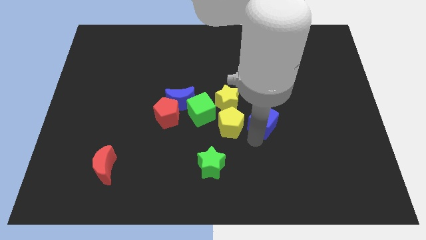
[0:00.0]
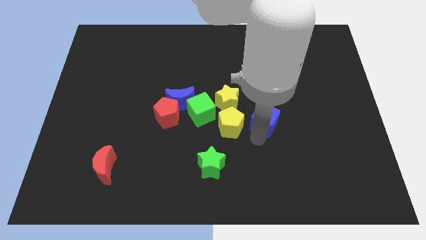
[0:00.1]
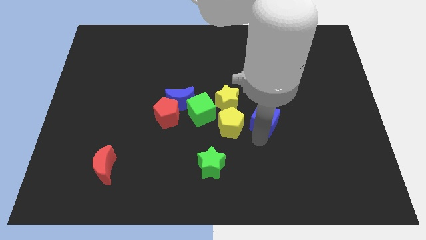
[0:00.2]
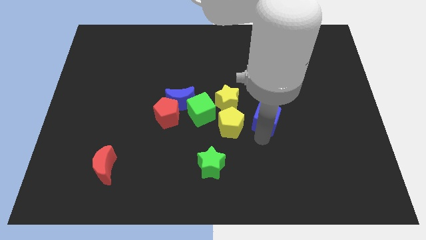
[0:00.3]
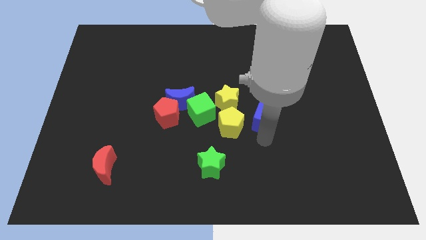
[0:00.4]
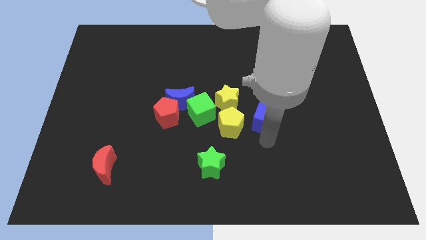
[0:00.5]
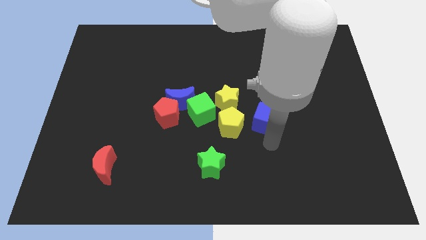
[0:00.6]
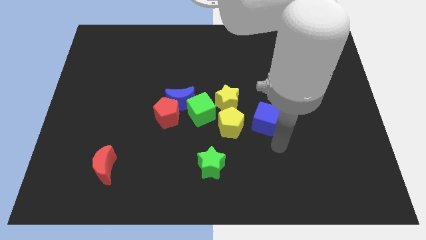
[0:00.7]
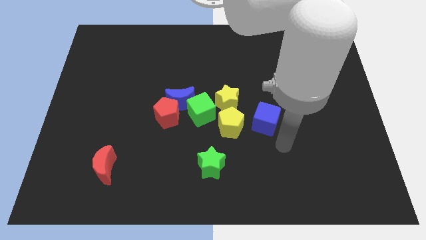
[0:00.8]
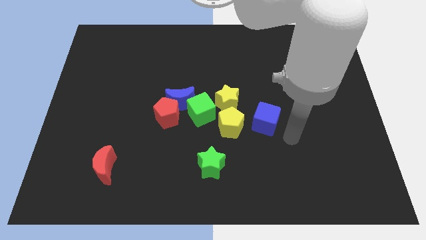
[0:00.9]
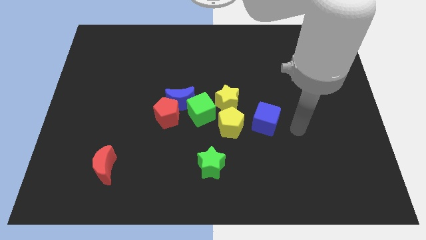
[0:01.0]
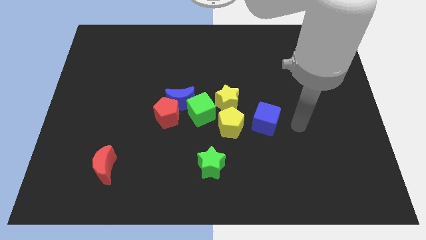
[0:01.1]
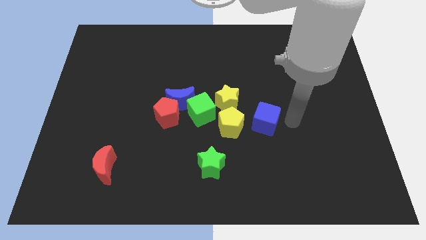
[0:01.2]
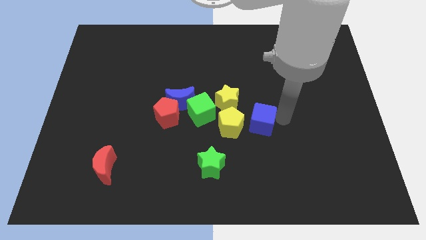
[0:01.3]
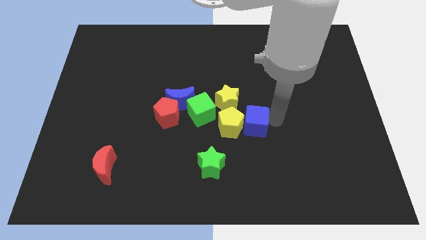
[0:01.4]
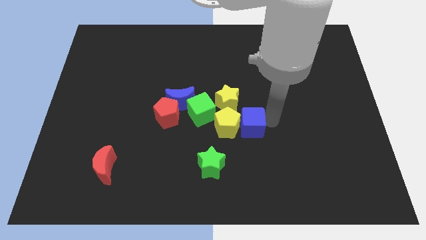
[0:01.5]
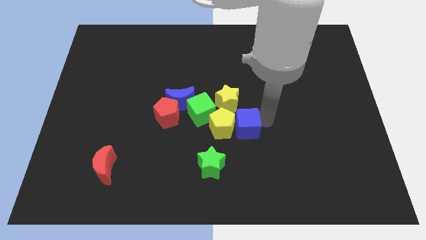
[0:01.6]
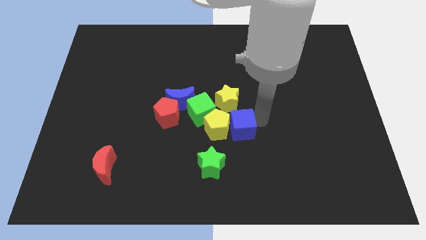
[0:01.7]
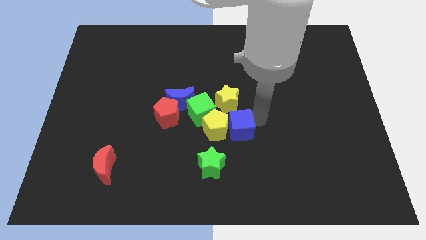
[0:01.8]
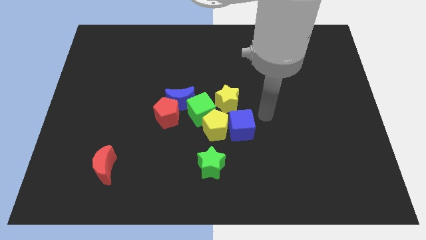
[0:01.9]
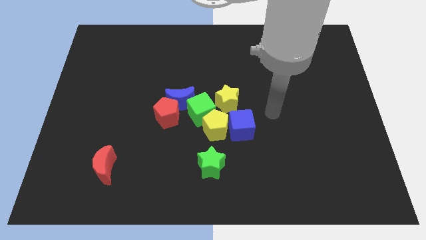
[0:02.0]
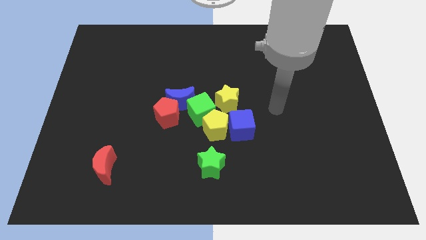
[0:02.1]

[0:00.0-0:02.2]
move the blue cube into the yellow pentagon

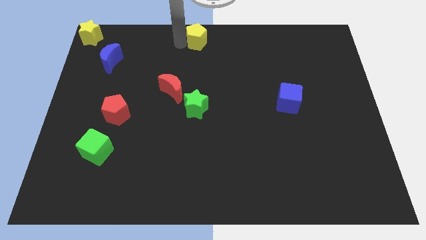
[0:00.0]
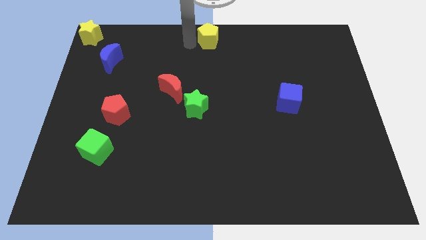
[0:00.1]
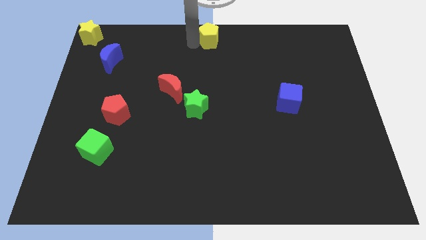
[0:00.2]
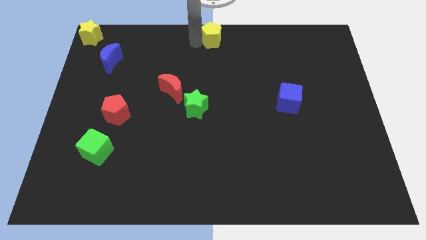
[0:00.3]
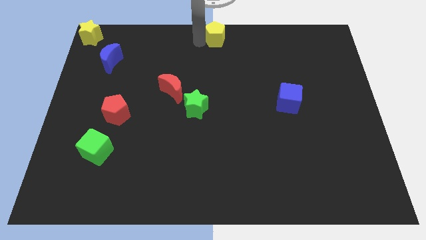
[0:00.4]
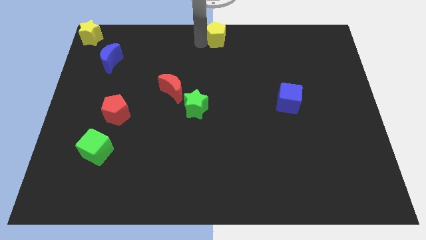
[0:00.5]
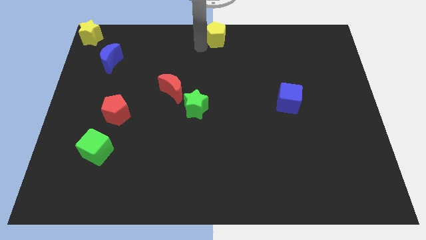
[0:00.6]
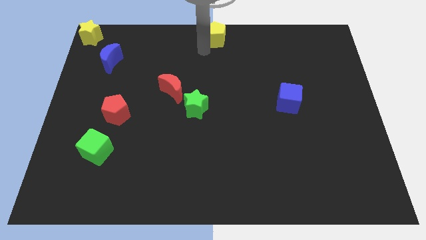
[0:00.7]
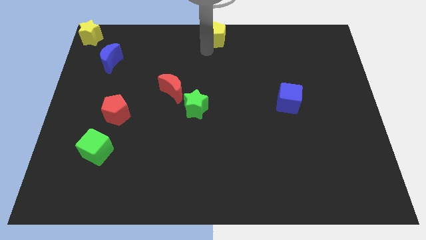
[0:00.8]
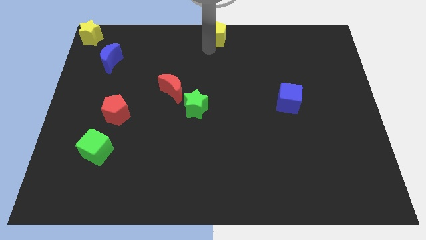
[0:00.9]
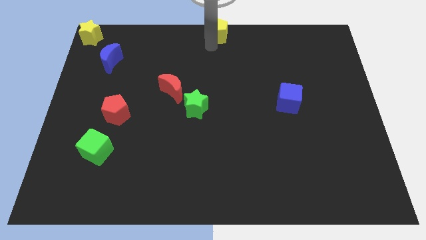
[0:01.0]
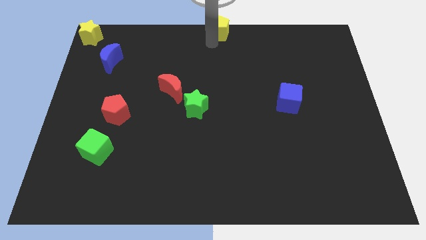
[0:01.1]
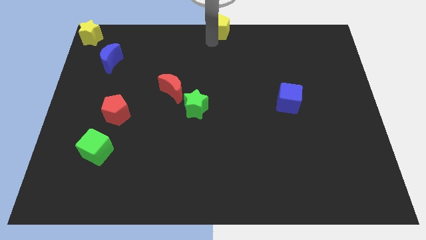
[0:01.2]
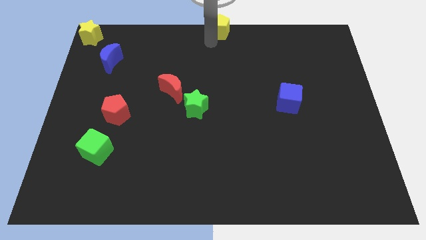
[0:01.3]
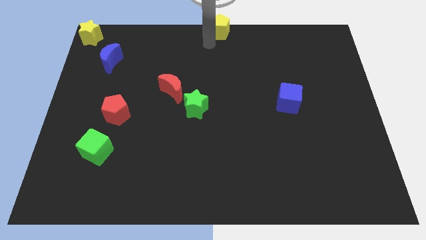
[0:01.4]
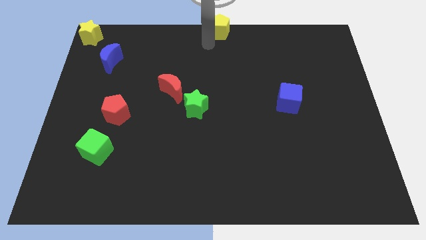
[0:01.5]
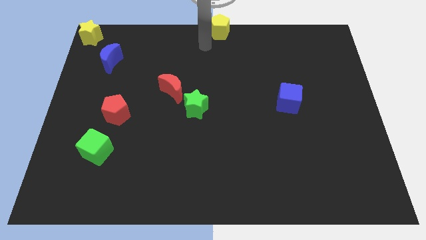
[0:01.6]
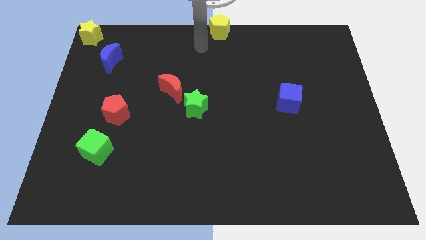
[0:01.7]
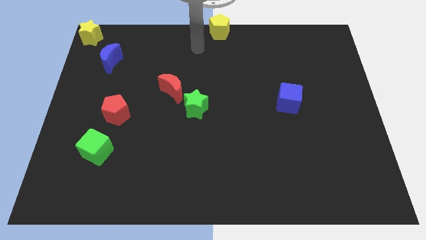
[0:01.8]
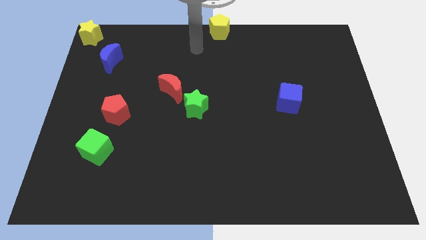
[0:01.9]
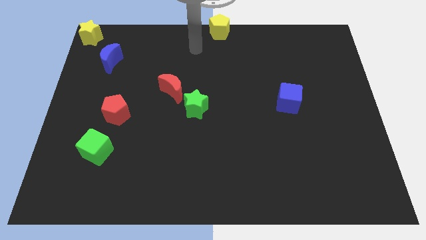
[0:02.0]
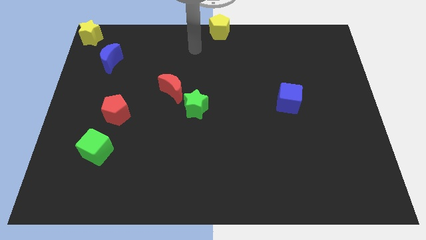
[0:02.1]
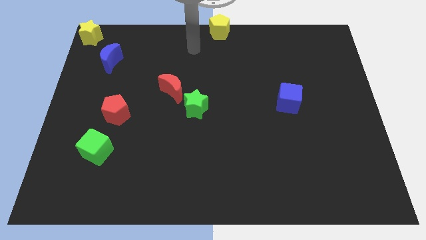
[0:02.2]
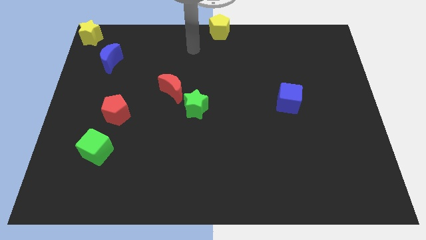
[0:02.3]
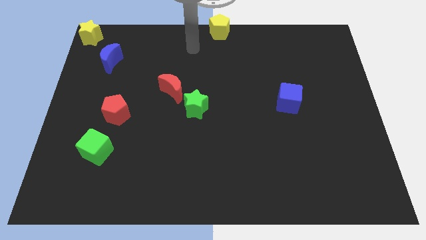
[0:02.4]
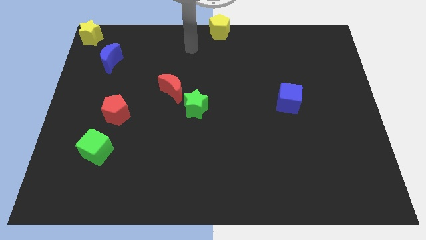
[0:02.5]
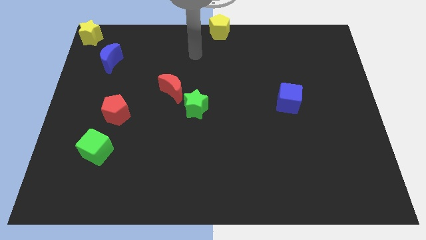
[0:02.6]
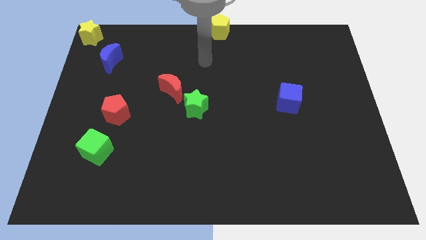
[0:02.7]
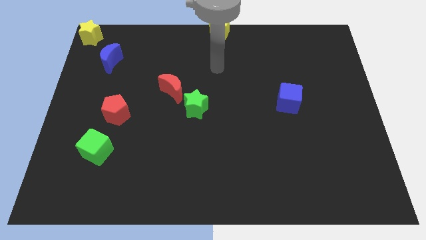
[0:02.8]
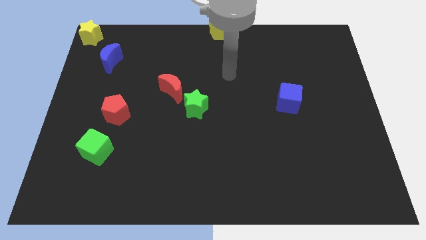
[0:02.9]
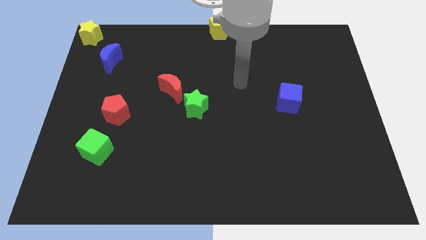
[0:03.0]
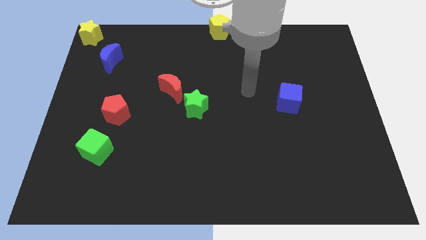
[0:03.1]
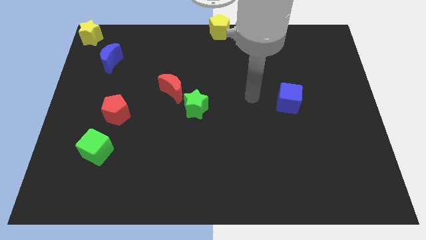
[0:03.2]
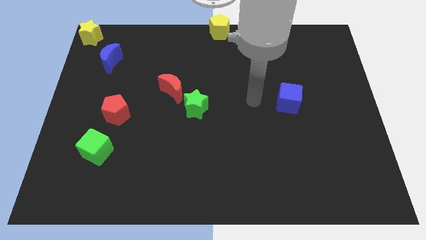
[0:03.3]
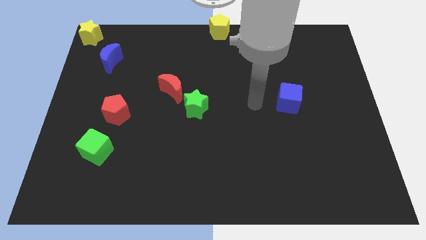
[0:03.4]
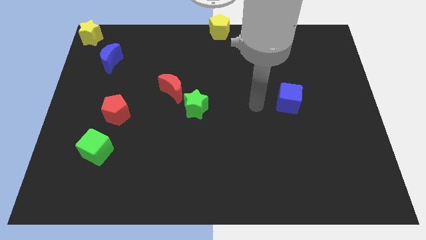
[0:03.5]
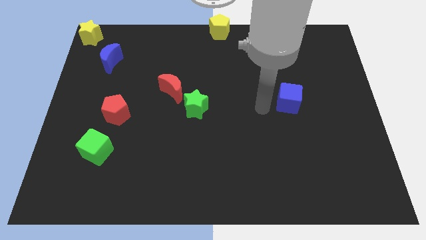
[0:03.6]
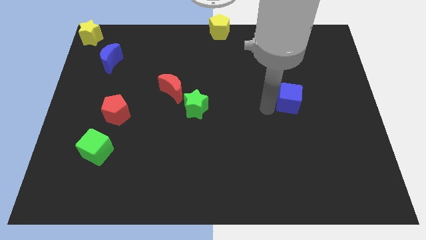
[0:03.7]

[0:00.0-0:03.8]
move the yellow pentagon at the top center

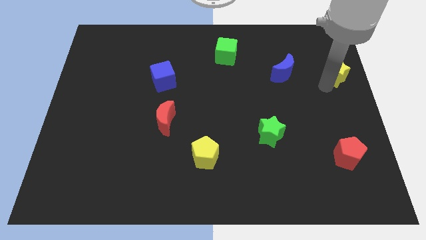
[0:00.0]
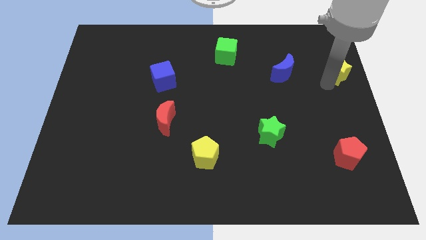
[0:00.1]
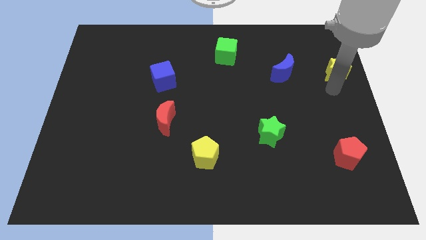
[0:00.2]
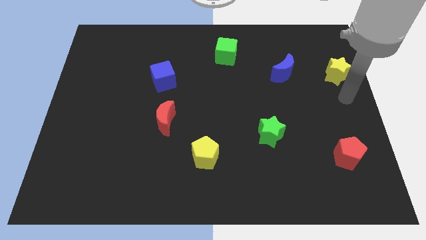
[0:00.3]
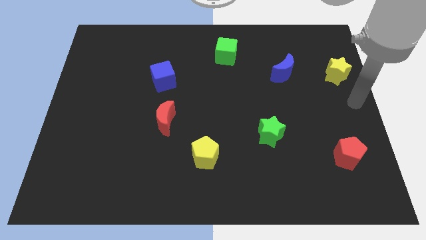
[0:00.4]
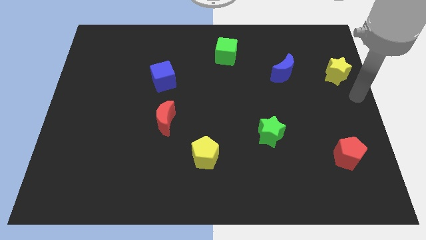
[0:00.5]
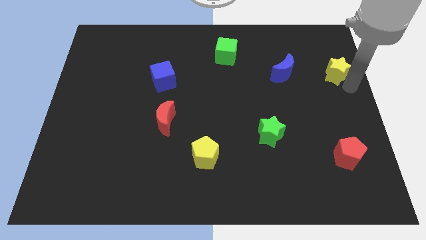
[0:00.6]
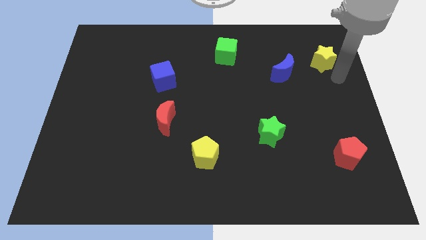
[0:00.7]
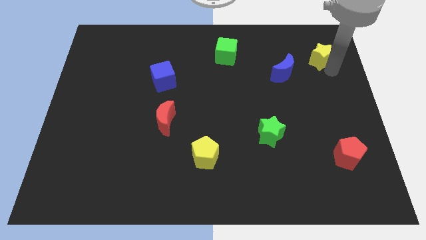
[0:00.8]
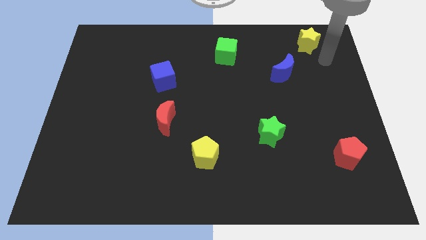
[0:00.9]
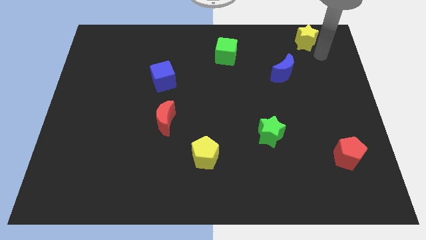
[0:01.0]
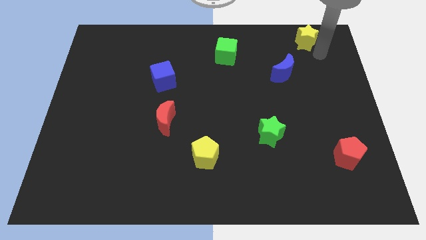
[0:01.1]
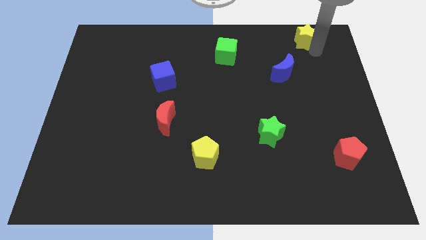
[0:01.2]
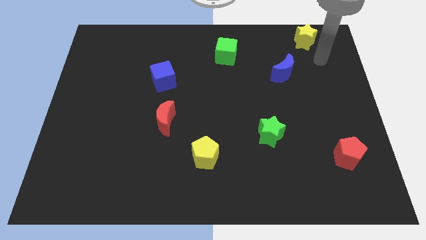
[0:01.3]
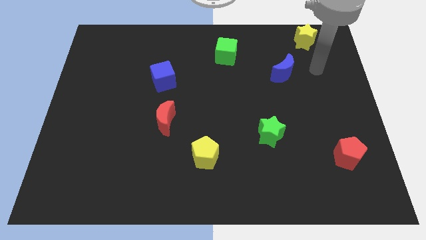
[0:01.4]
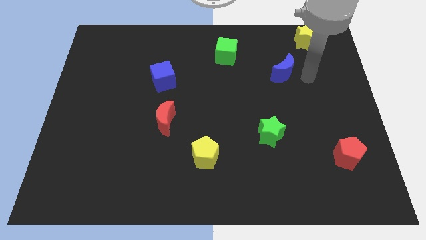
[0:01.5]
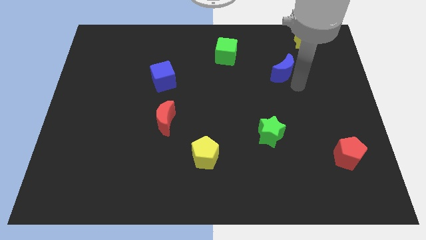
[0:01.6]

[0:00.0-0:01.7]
move the yellow star towards the top side of the board

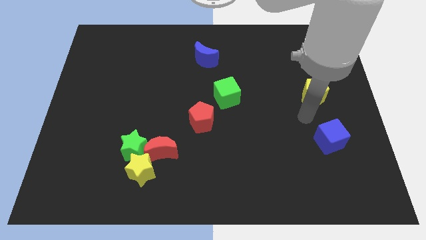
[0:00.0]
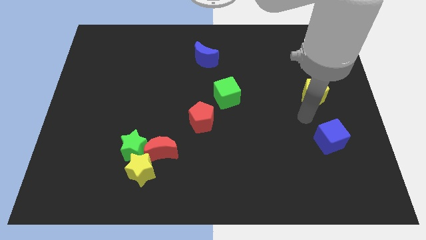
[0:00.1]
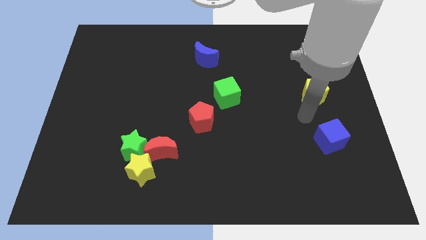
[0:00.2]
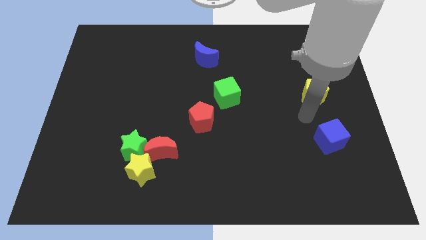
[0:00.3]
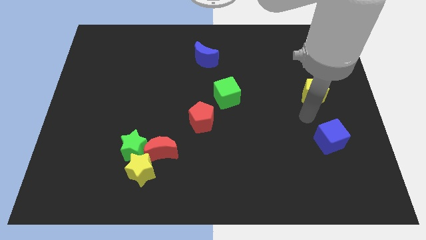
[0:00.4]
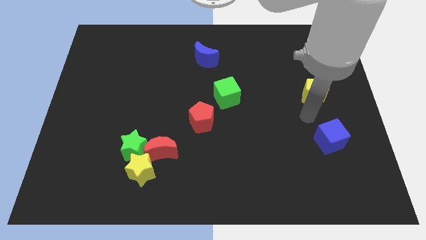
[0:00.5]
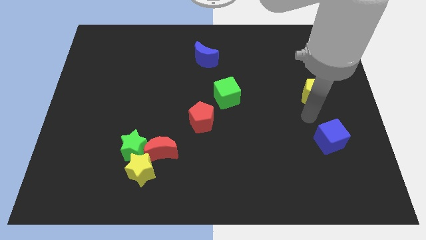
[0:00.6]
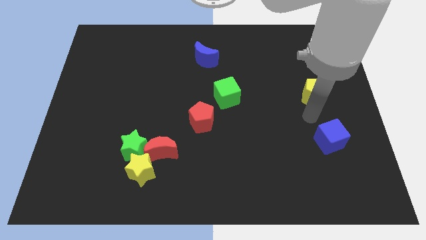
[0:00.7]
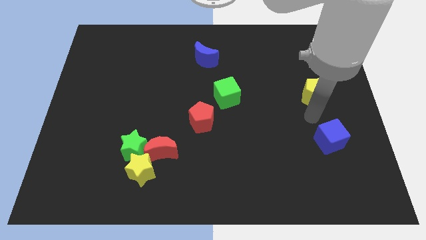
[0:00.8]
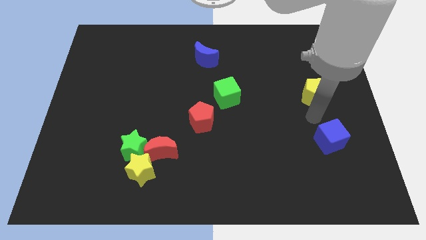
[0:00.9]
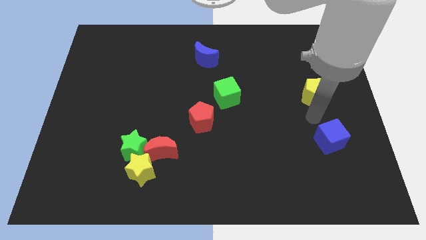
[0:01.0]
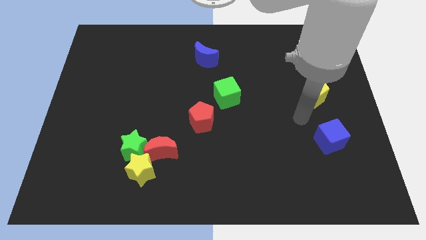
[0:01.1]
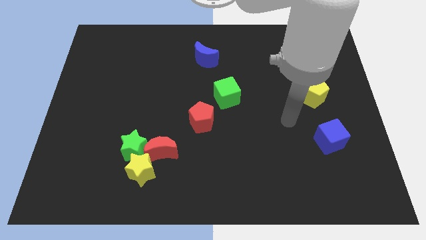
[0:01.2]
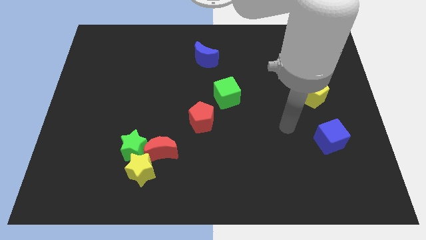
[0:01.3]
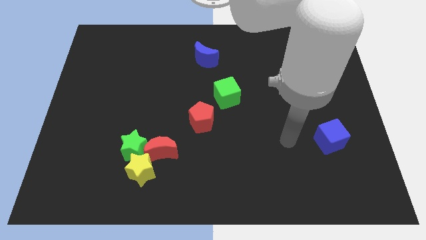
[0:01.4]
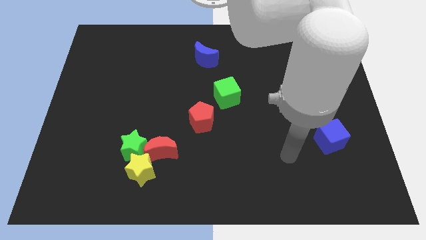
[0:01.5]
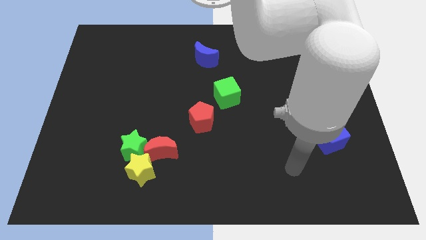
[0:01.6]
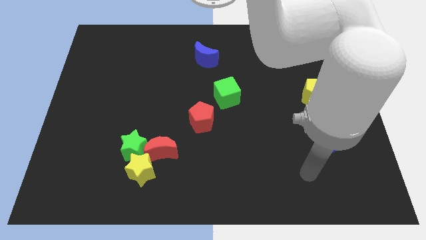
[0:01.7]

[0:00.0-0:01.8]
point your arm below blue cube
